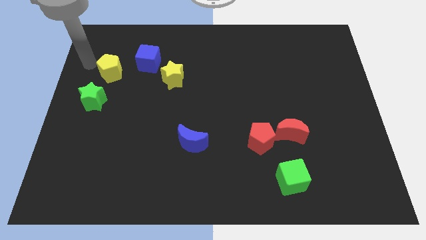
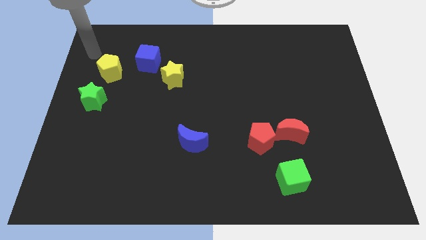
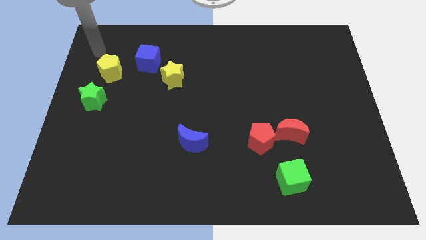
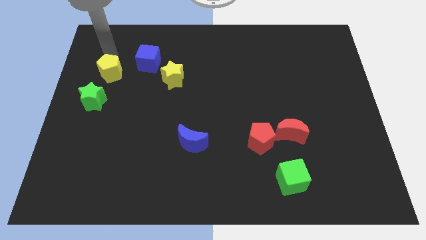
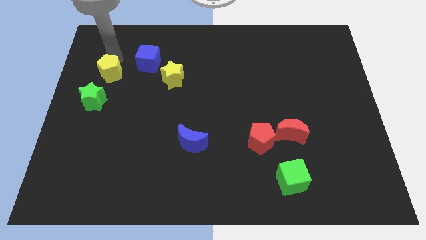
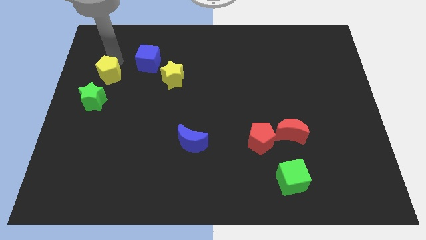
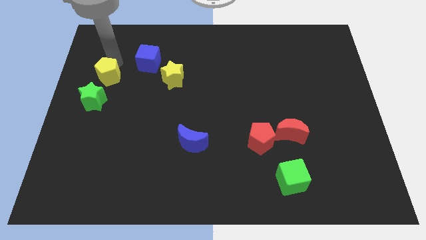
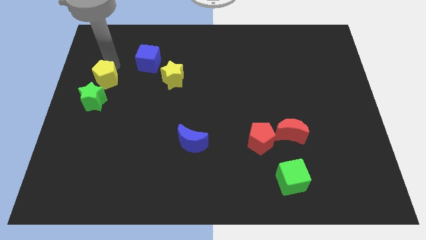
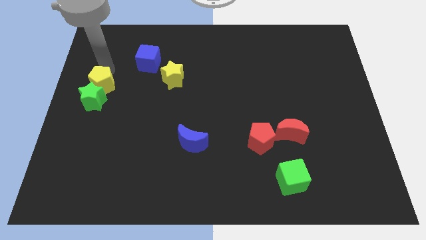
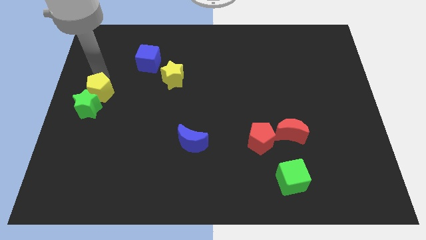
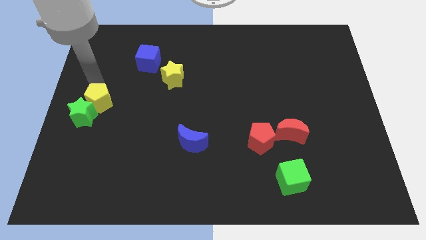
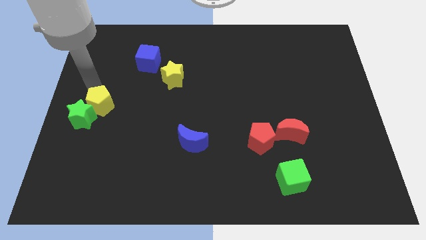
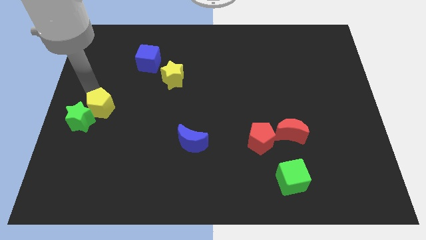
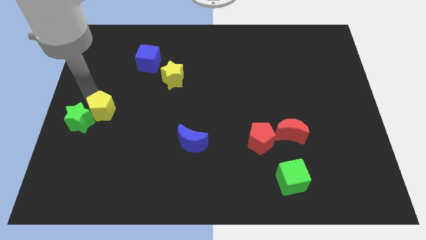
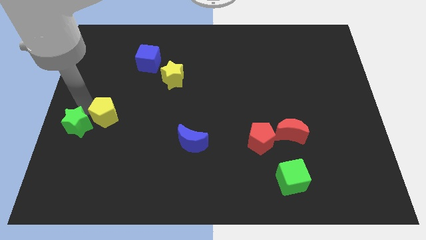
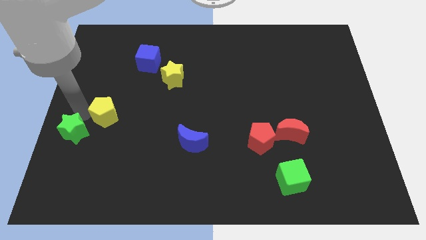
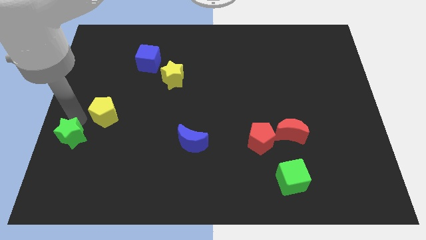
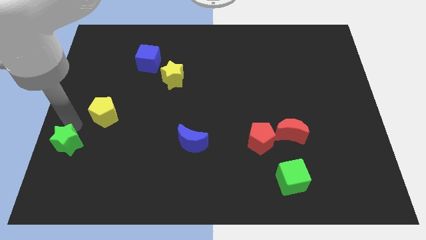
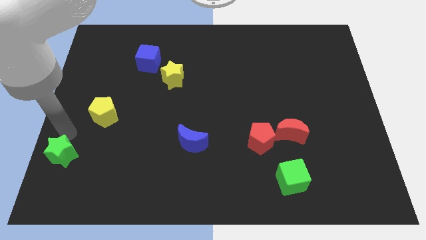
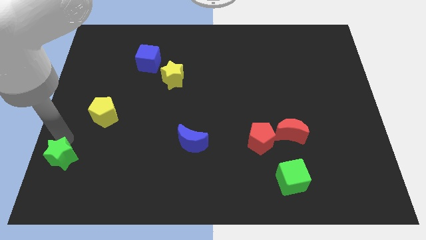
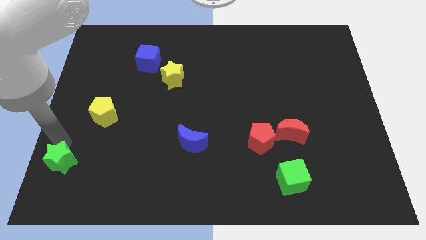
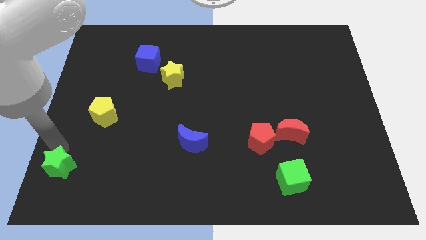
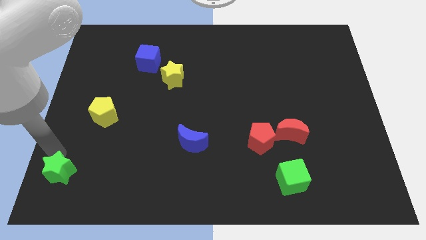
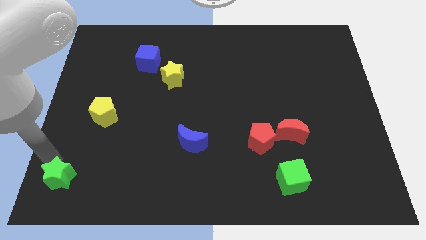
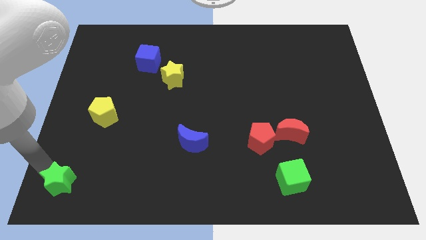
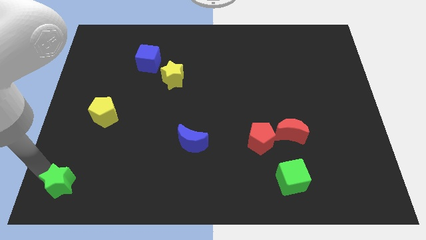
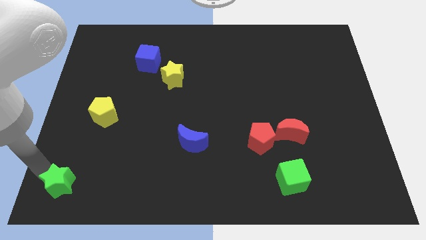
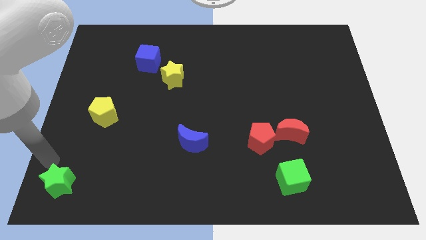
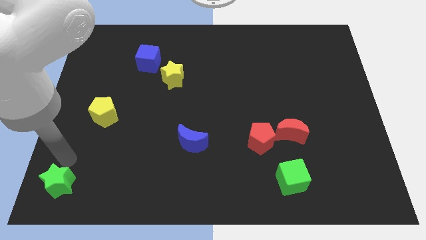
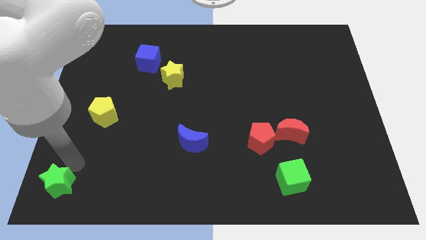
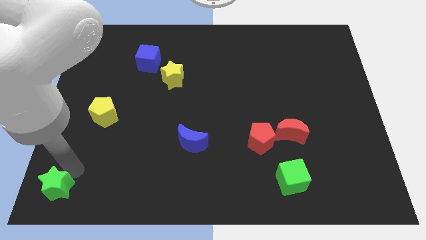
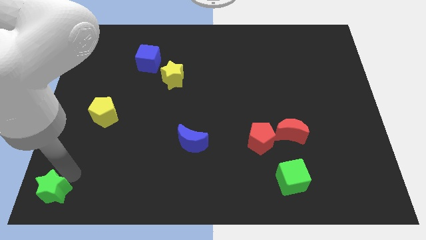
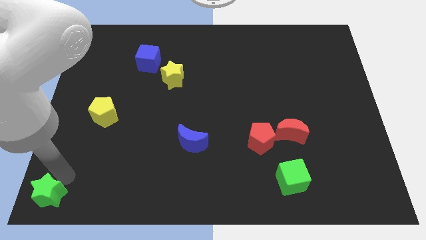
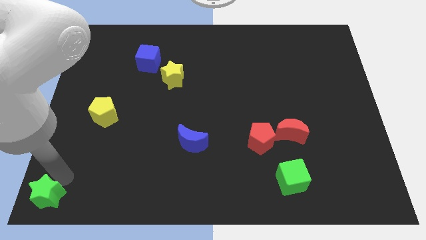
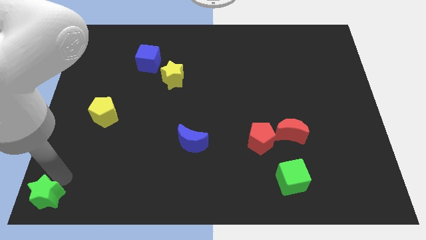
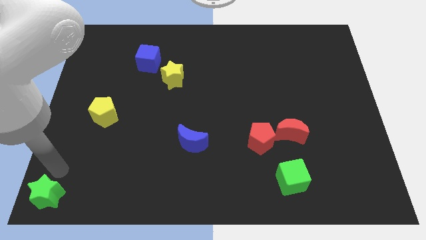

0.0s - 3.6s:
place green star towards bottom left corner

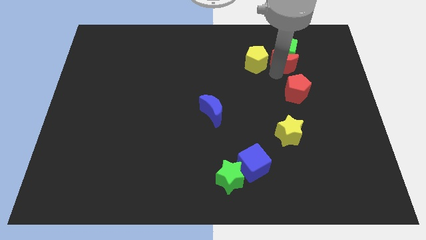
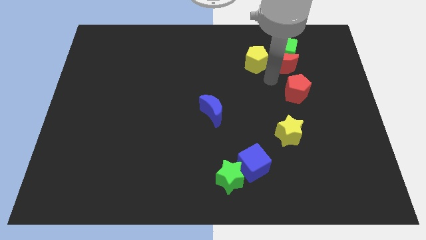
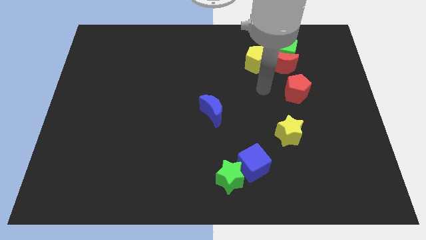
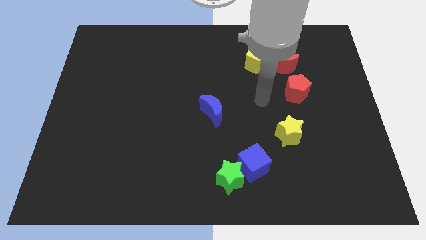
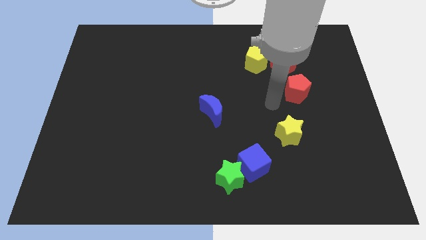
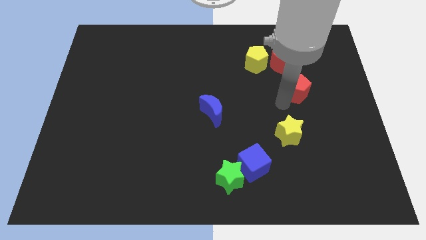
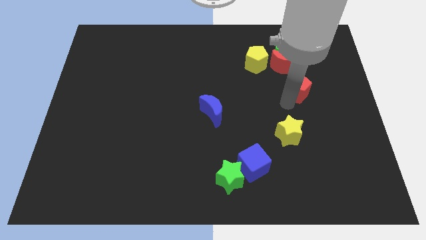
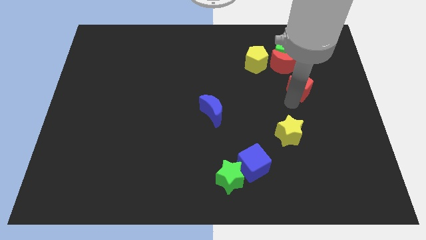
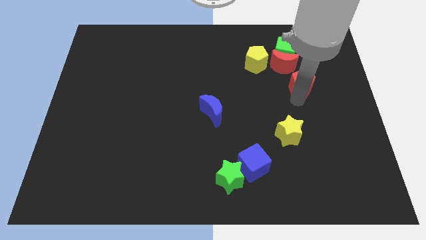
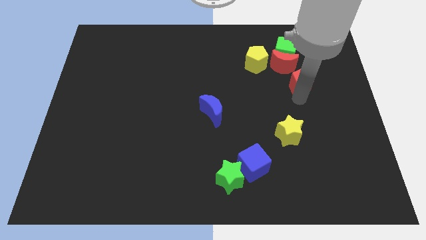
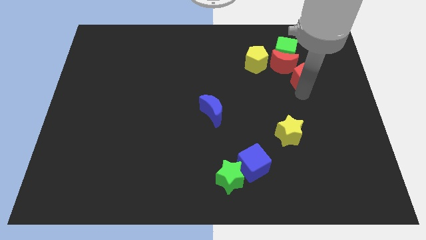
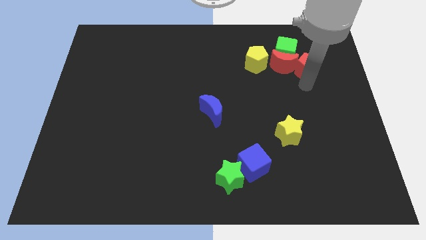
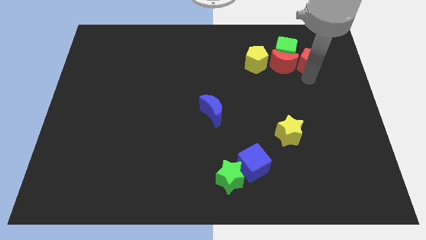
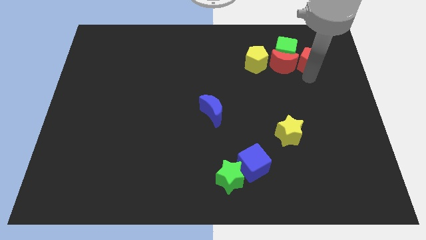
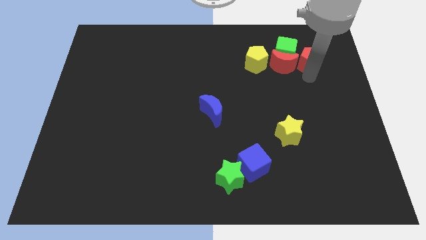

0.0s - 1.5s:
put the red pentagon right to the red moon

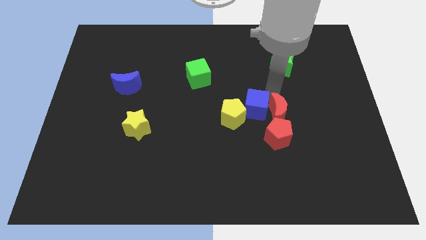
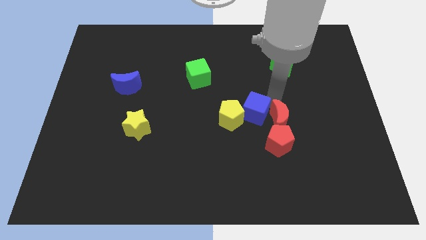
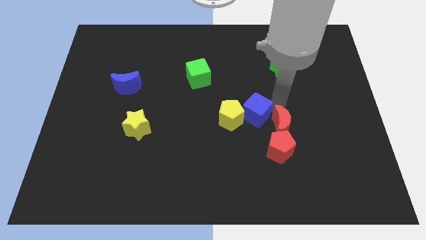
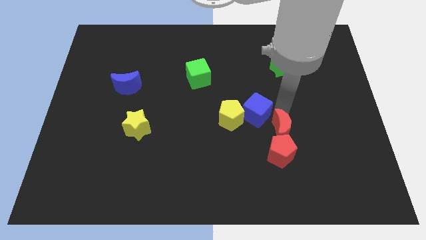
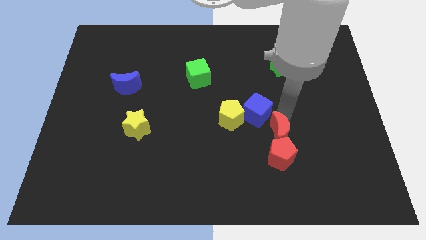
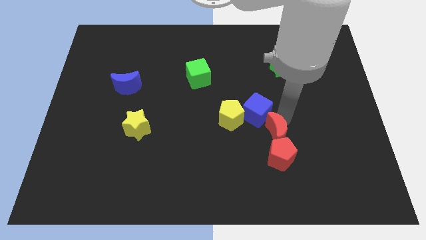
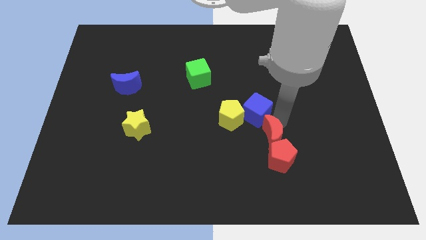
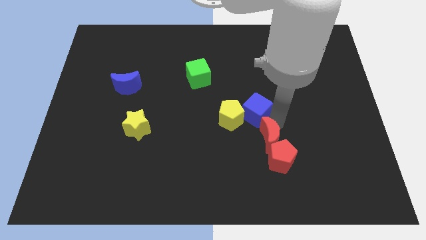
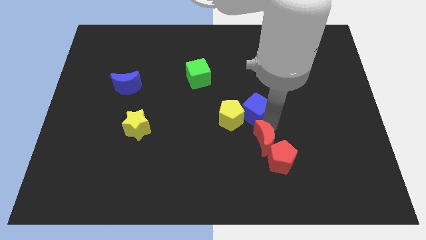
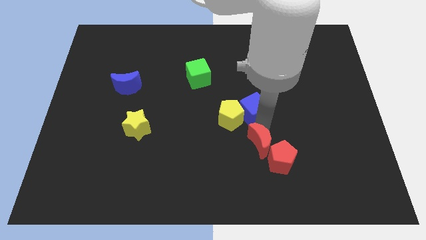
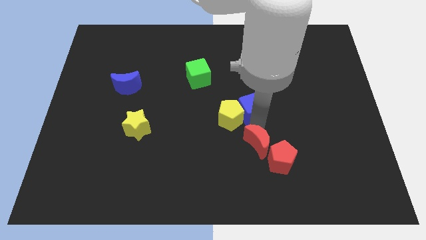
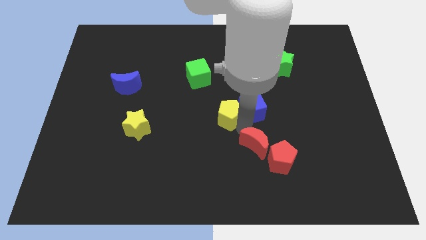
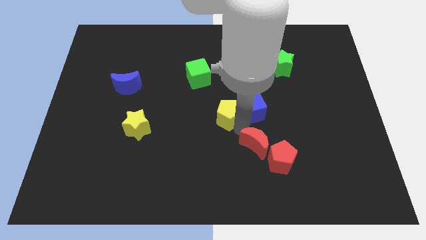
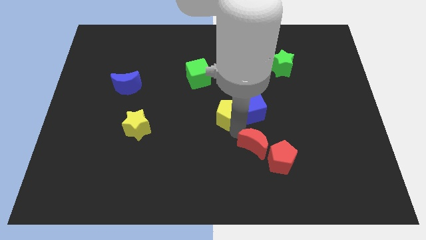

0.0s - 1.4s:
separate the red crescent from the blue cube

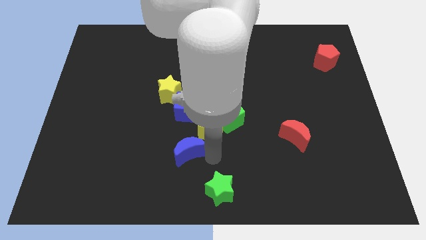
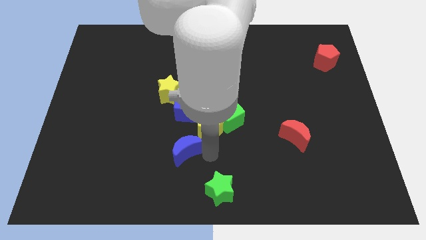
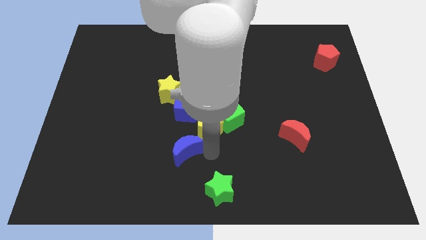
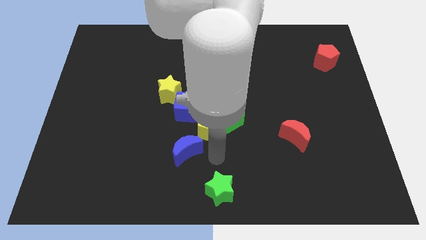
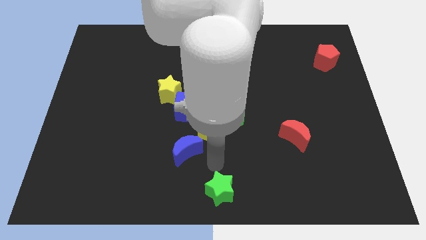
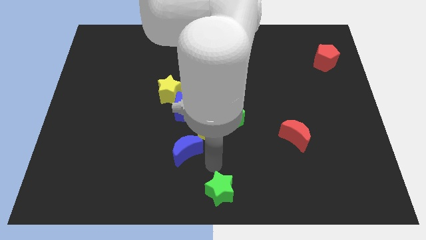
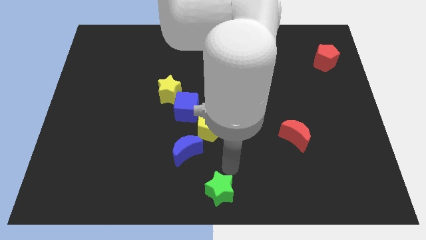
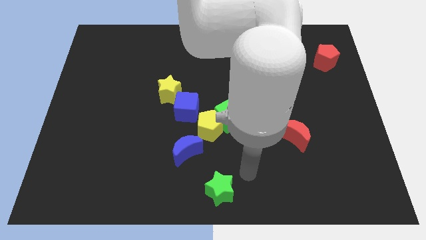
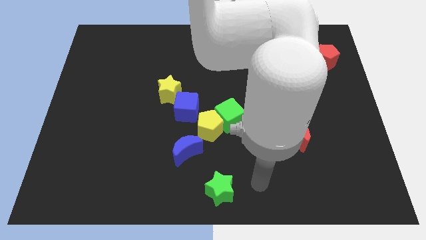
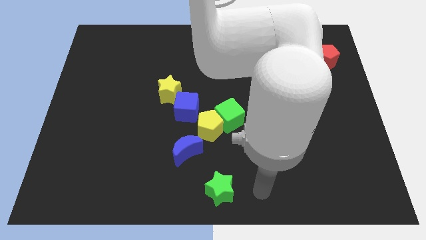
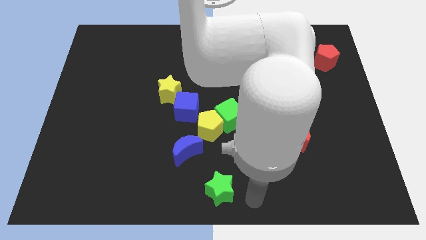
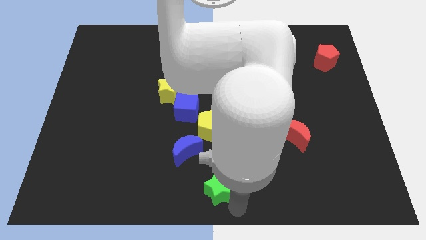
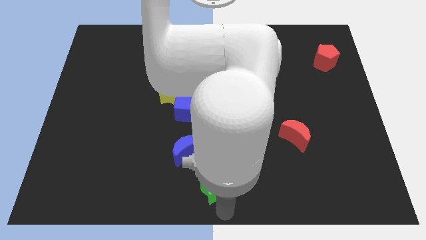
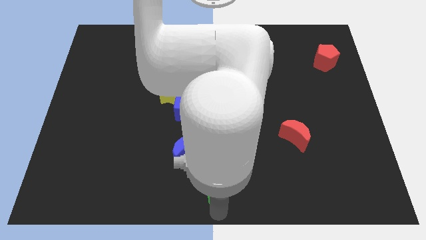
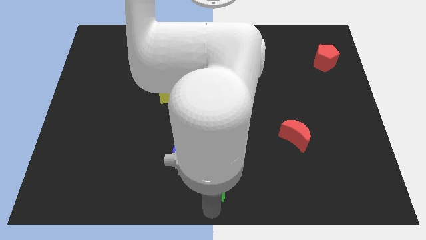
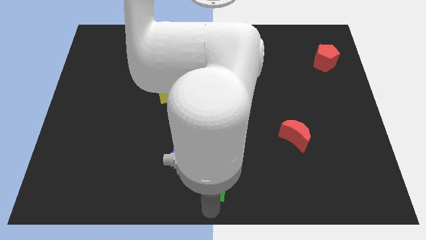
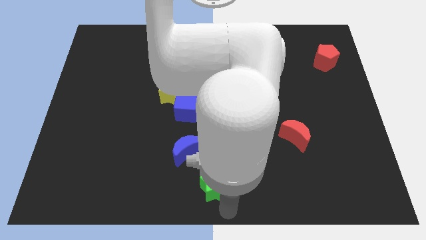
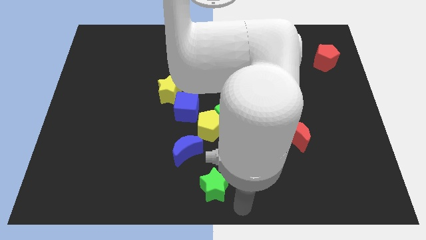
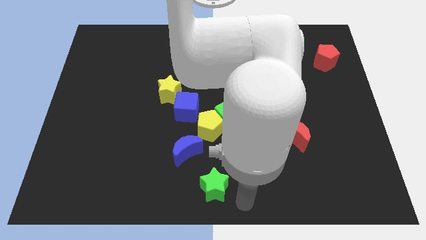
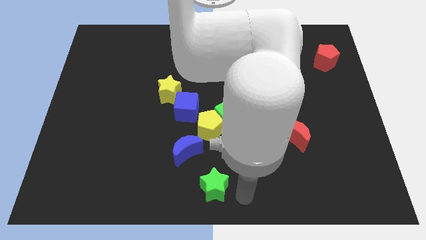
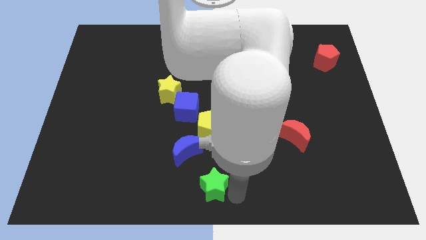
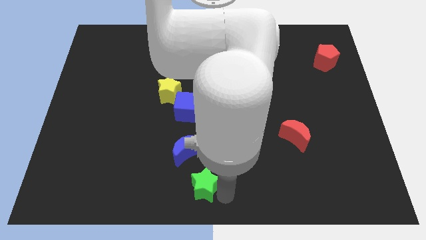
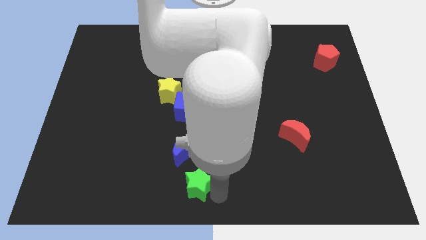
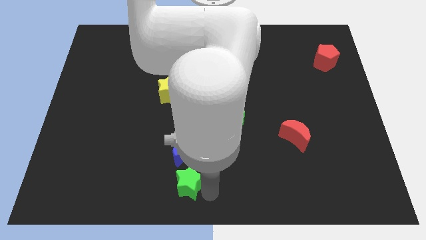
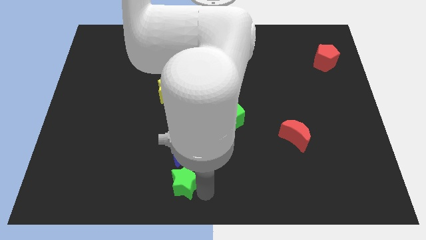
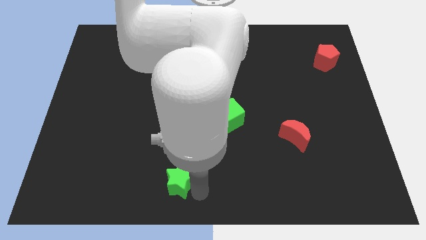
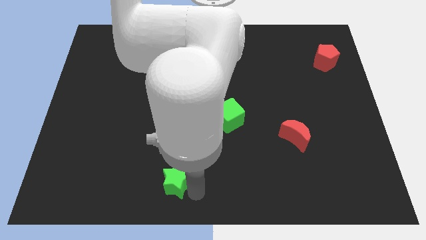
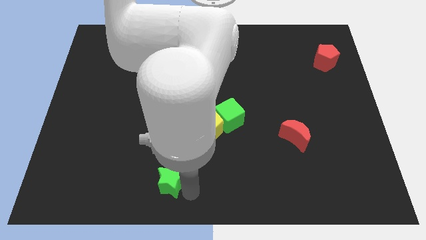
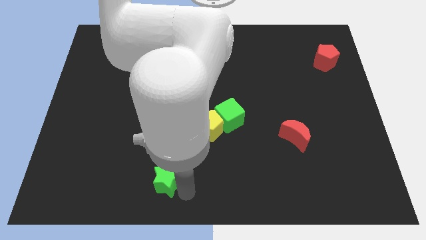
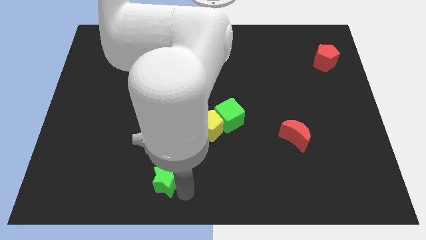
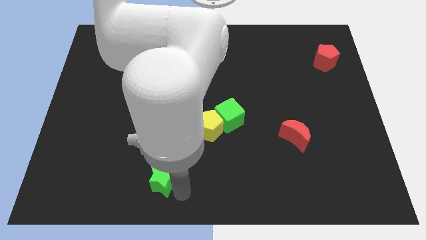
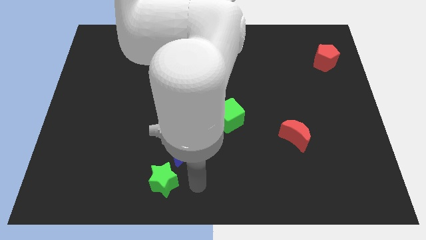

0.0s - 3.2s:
move the green star diagonally to the bottom left to the blue cube
